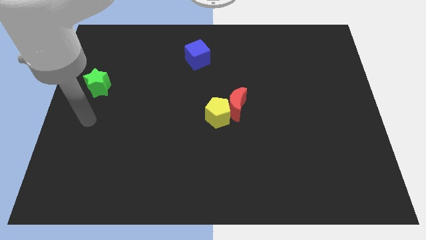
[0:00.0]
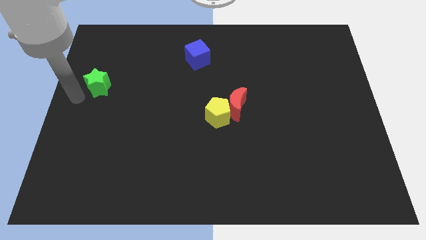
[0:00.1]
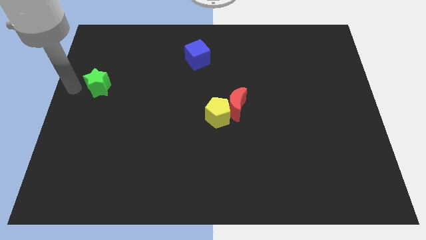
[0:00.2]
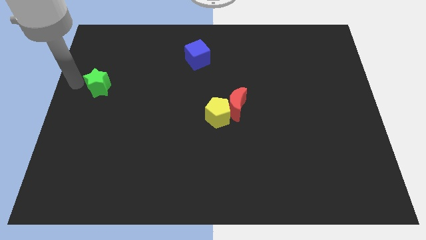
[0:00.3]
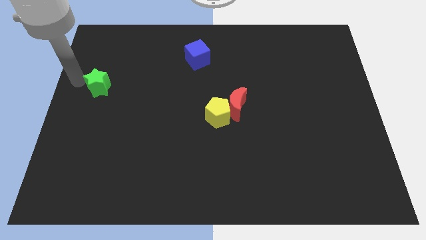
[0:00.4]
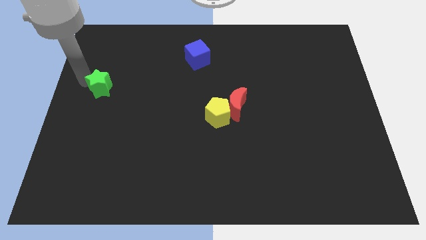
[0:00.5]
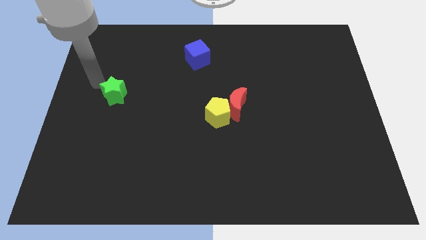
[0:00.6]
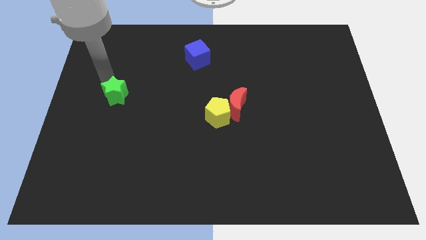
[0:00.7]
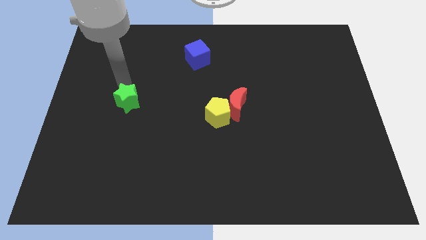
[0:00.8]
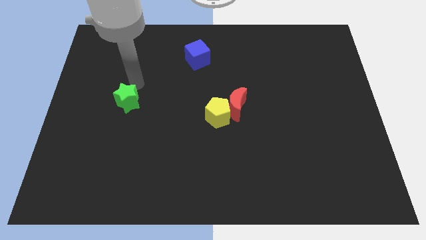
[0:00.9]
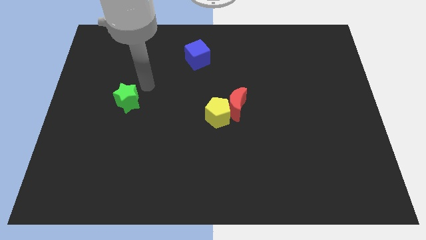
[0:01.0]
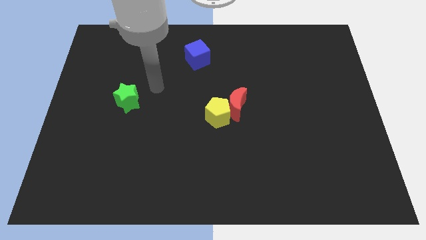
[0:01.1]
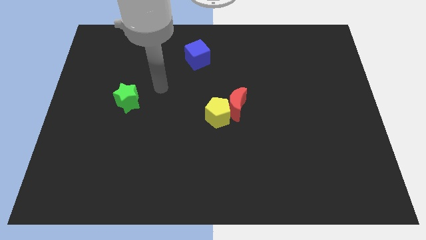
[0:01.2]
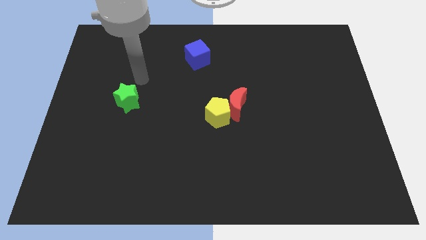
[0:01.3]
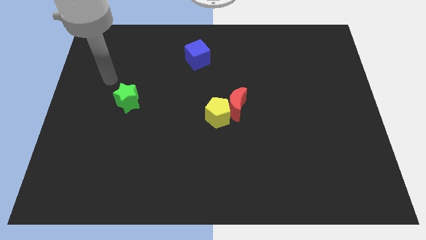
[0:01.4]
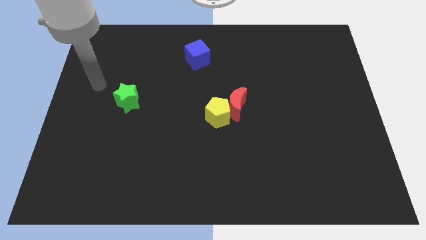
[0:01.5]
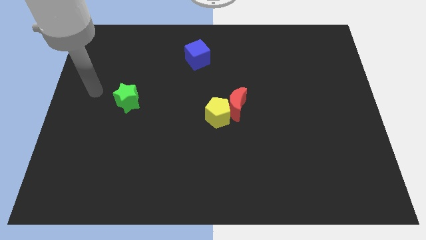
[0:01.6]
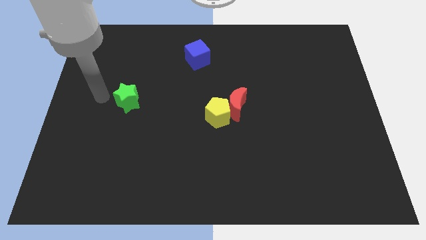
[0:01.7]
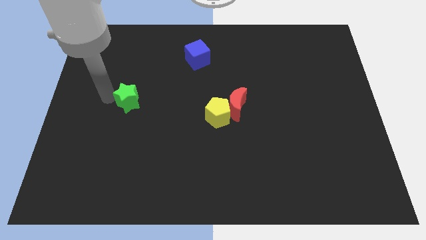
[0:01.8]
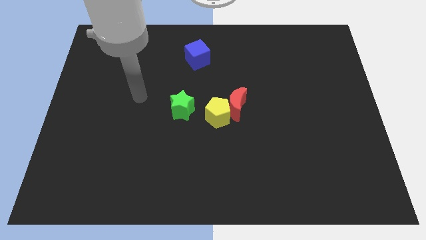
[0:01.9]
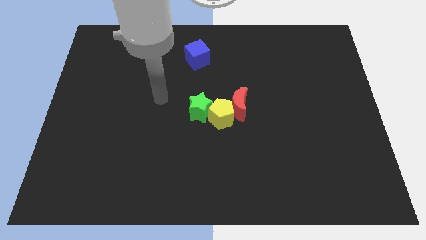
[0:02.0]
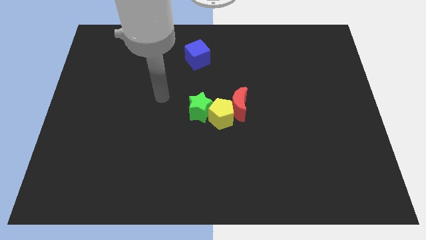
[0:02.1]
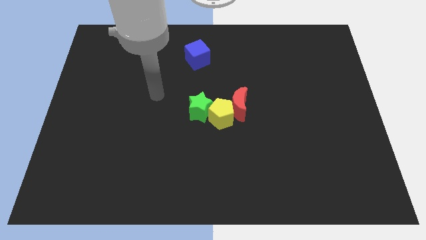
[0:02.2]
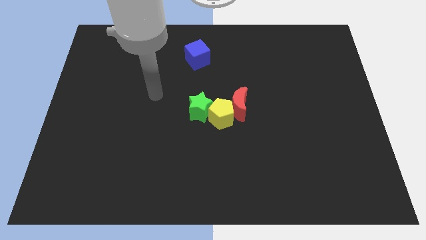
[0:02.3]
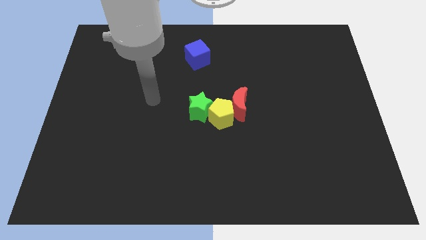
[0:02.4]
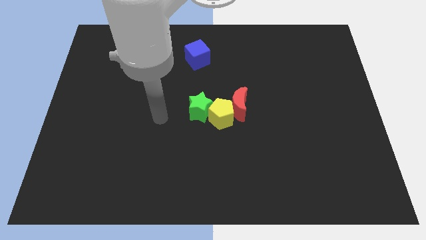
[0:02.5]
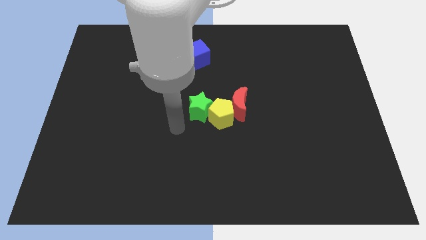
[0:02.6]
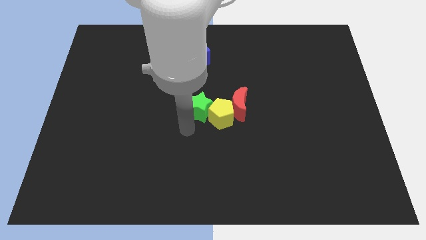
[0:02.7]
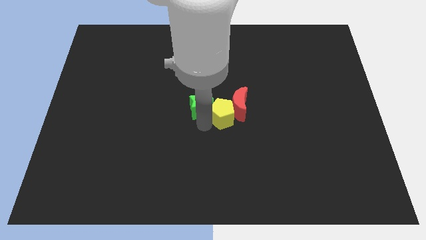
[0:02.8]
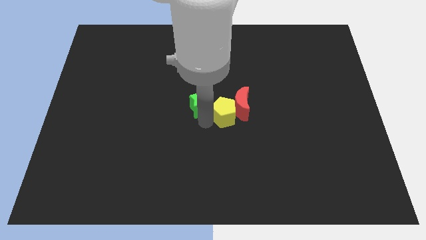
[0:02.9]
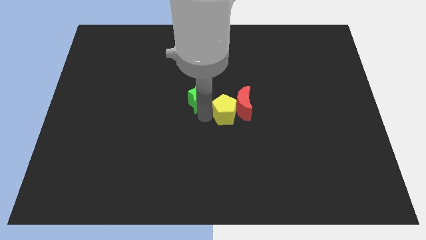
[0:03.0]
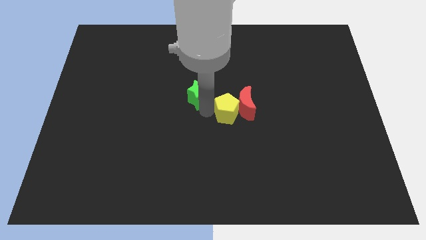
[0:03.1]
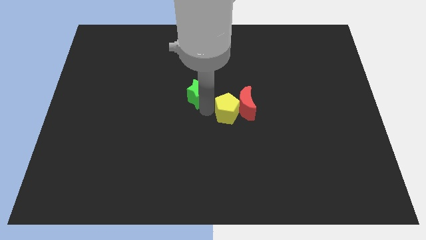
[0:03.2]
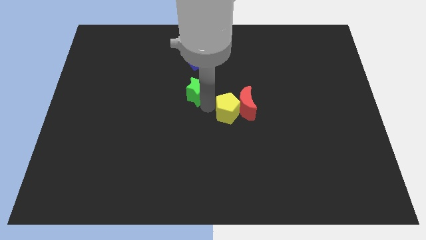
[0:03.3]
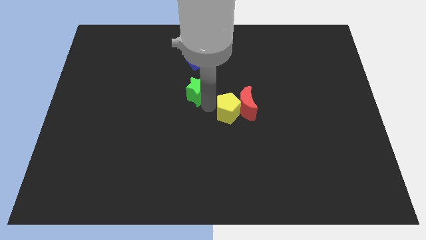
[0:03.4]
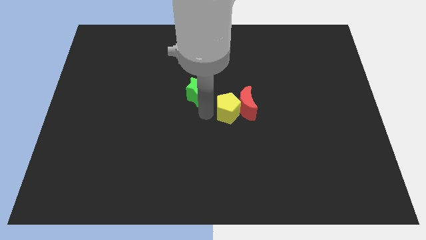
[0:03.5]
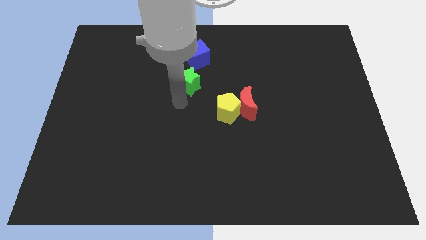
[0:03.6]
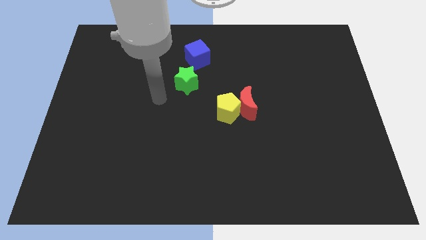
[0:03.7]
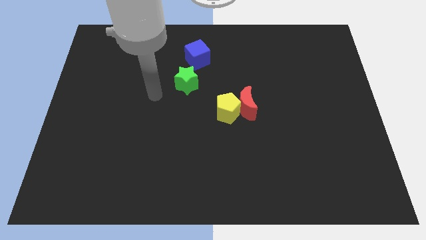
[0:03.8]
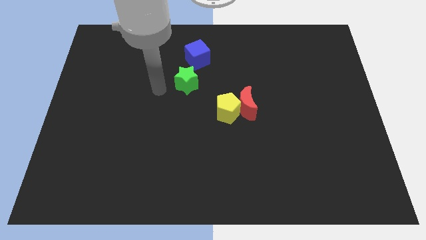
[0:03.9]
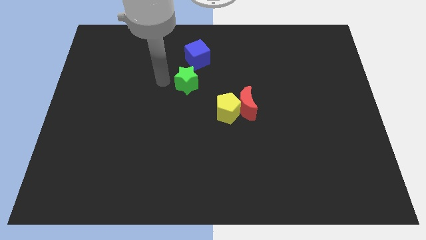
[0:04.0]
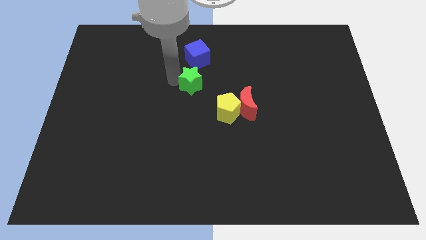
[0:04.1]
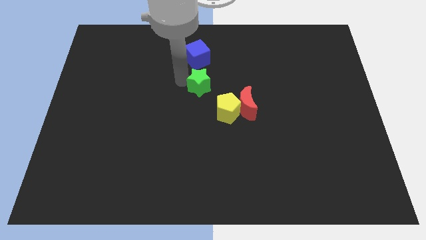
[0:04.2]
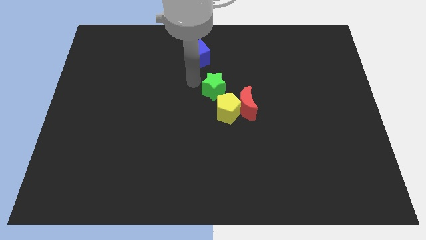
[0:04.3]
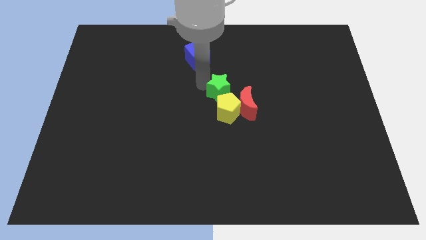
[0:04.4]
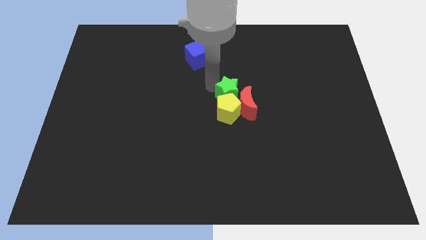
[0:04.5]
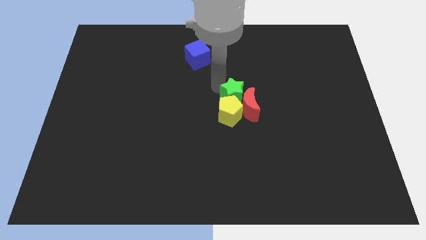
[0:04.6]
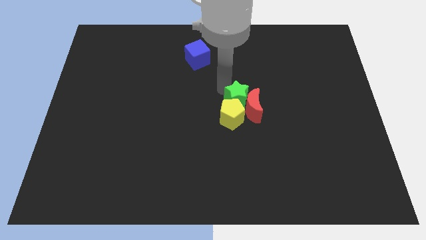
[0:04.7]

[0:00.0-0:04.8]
put the star towards the red block

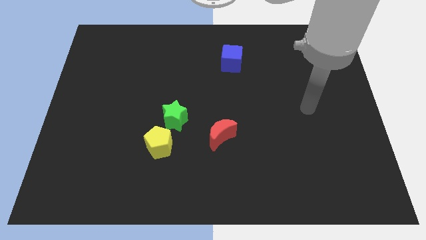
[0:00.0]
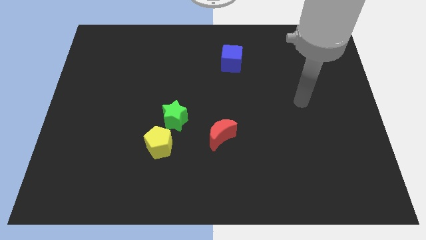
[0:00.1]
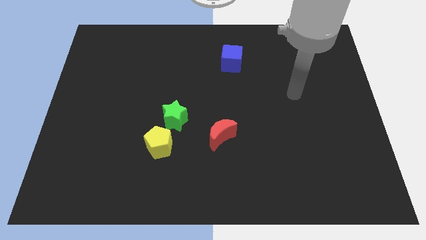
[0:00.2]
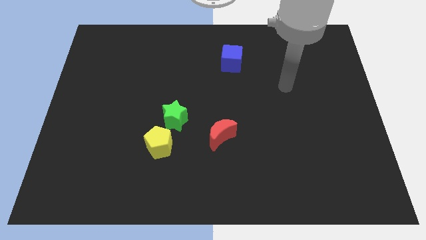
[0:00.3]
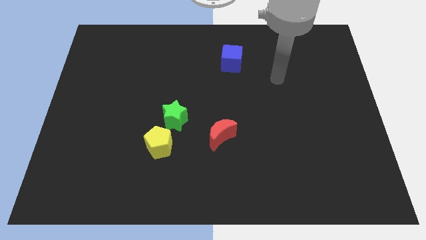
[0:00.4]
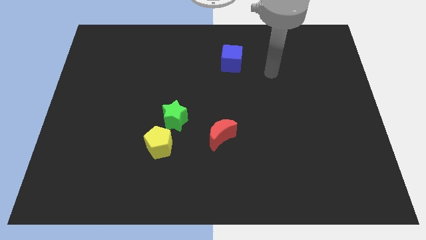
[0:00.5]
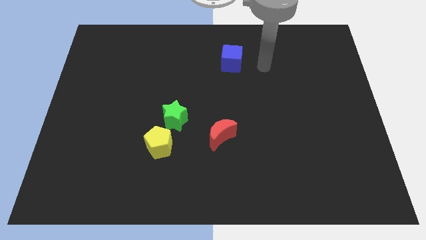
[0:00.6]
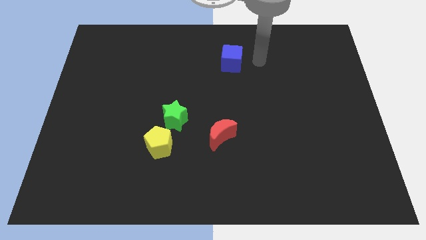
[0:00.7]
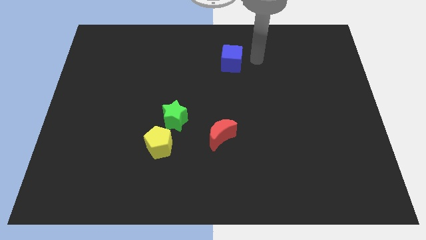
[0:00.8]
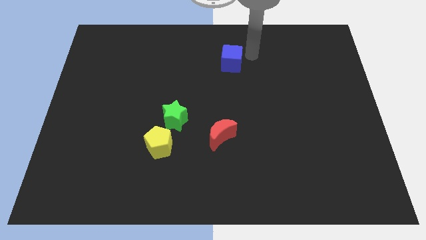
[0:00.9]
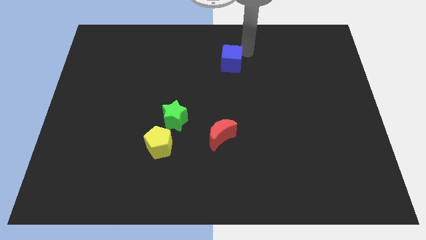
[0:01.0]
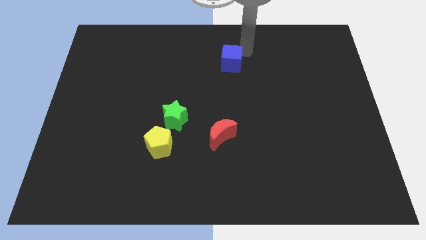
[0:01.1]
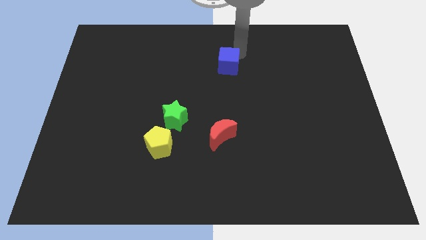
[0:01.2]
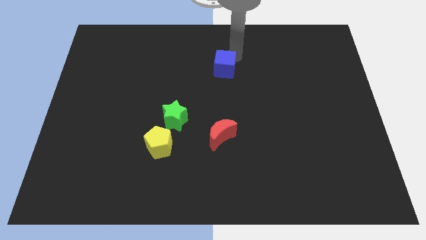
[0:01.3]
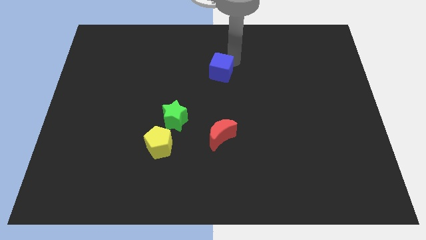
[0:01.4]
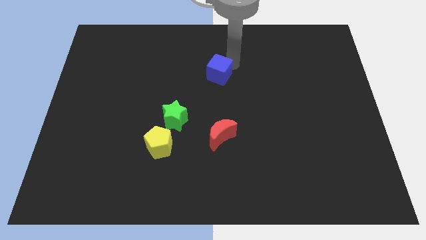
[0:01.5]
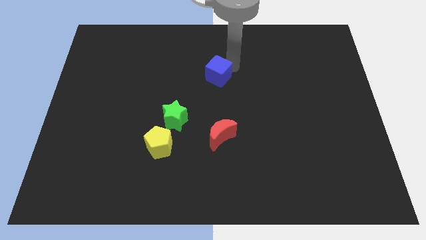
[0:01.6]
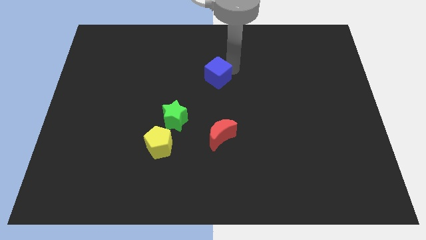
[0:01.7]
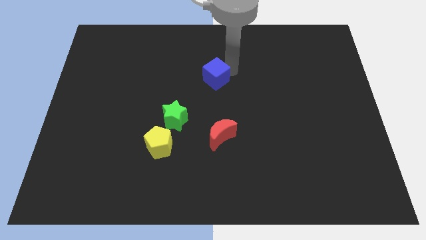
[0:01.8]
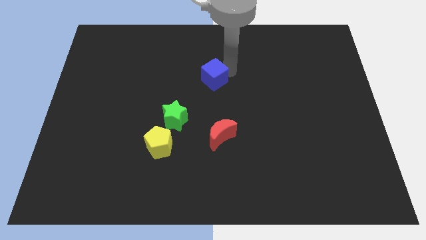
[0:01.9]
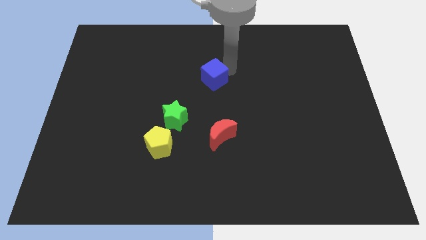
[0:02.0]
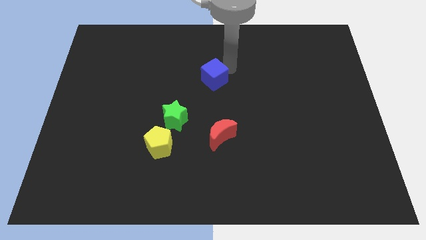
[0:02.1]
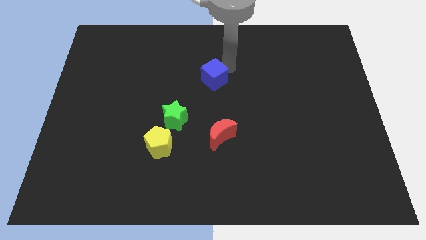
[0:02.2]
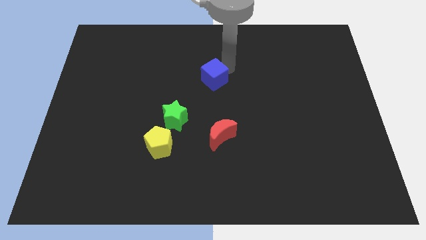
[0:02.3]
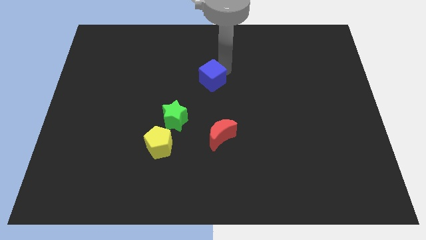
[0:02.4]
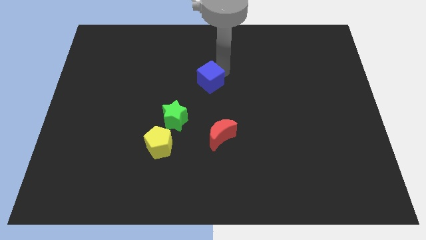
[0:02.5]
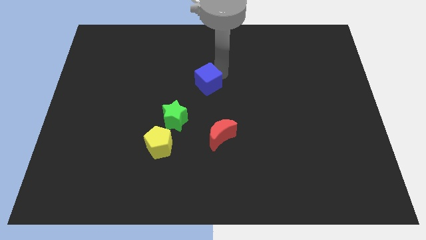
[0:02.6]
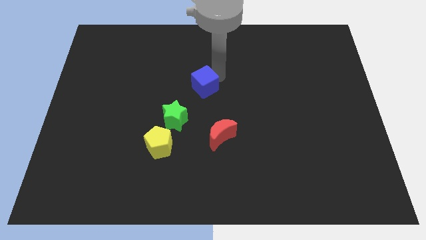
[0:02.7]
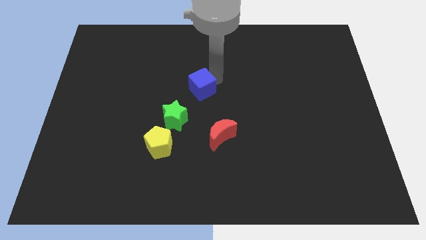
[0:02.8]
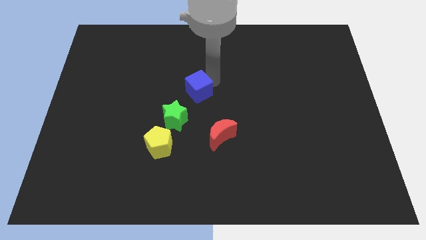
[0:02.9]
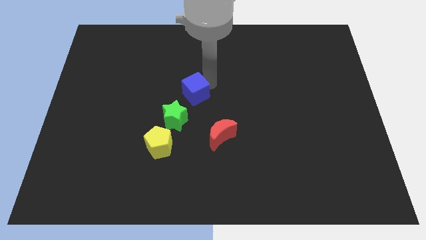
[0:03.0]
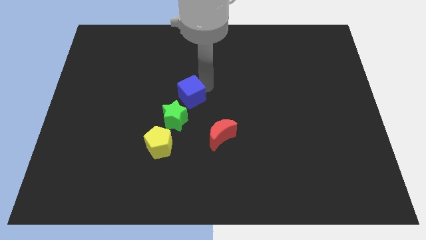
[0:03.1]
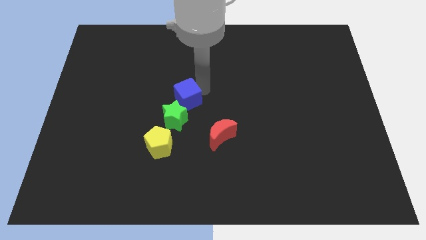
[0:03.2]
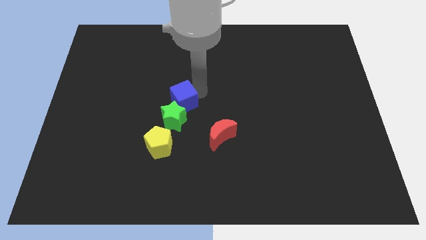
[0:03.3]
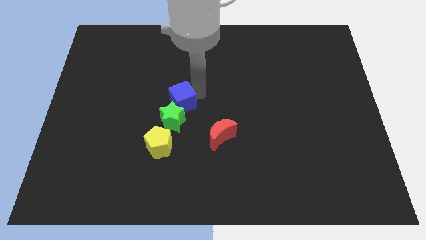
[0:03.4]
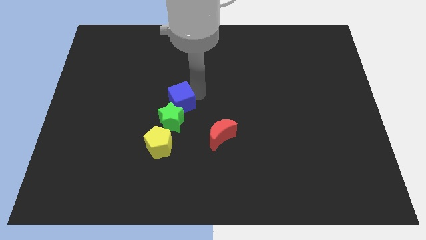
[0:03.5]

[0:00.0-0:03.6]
slide the cube close to the green block
